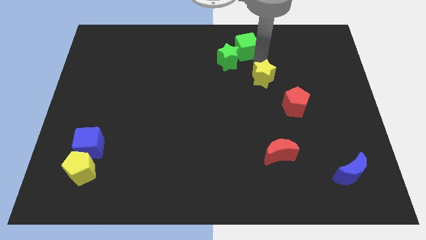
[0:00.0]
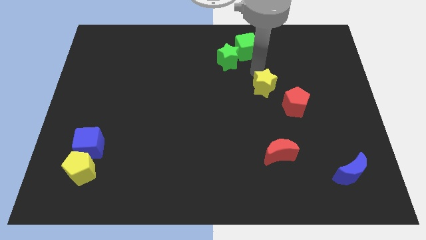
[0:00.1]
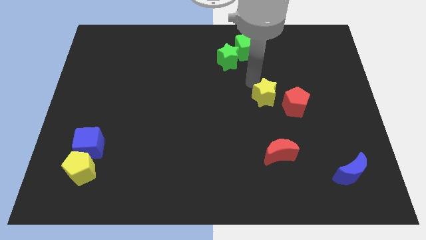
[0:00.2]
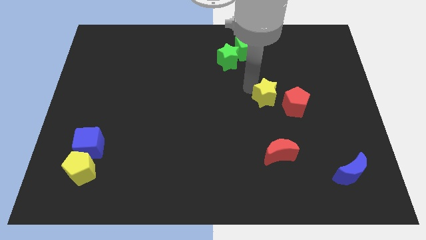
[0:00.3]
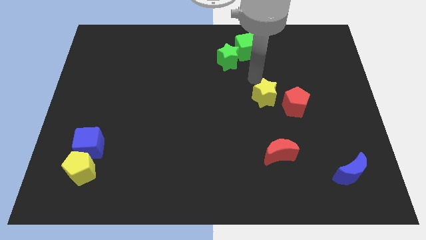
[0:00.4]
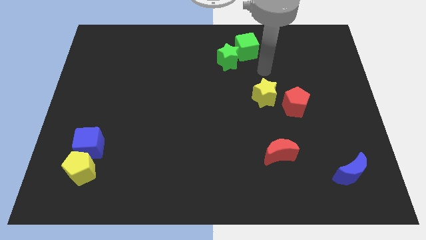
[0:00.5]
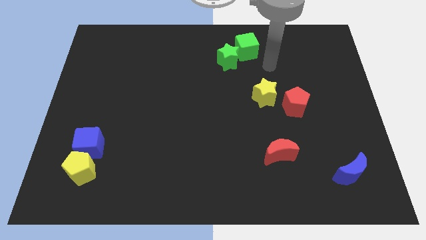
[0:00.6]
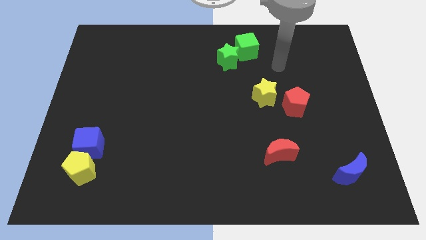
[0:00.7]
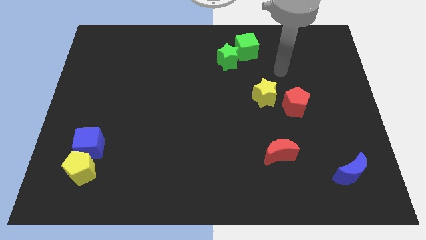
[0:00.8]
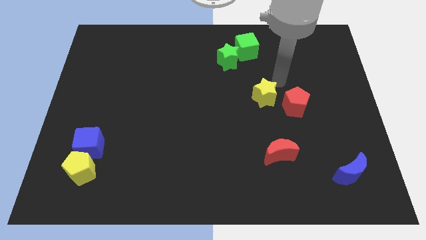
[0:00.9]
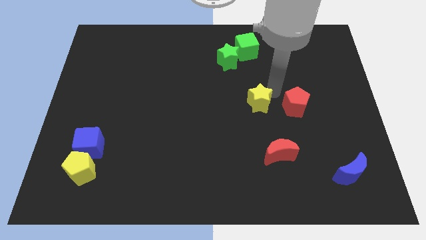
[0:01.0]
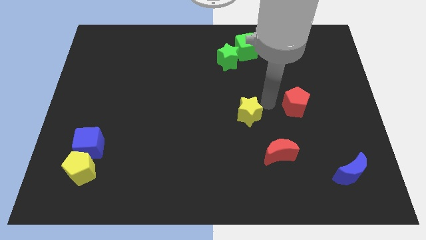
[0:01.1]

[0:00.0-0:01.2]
move the yellow star to the left of the red pentagon

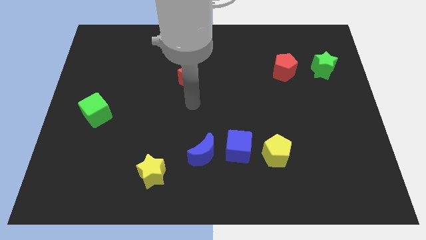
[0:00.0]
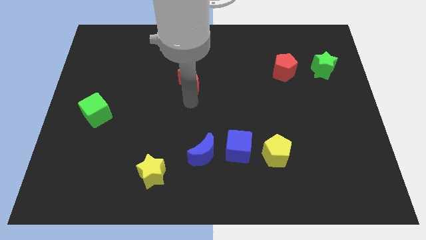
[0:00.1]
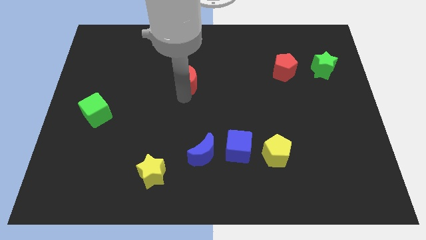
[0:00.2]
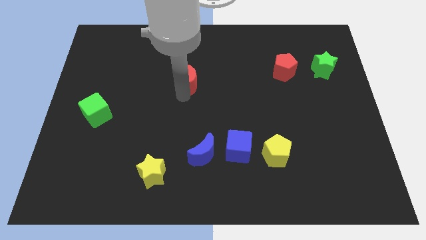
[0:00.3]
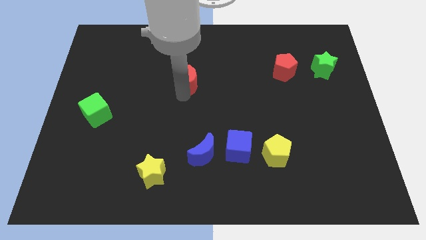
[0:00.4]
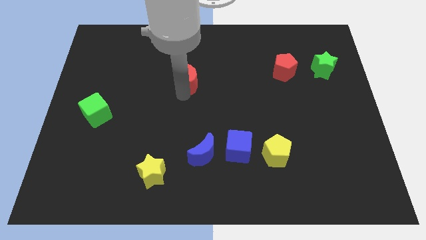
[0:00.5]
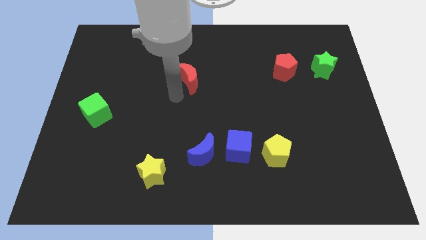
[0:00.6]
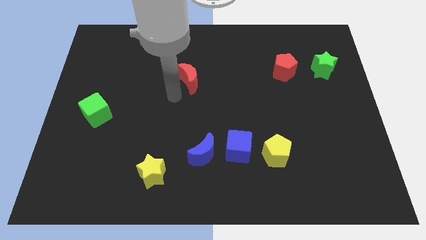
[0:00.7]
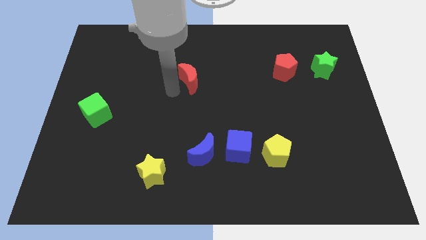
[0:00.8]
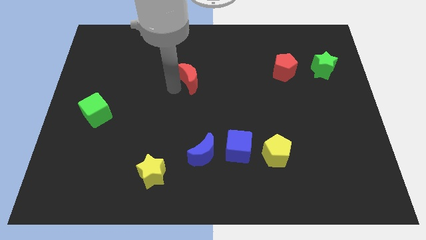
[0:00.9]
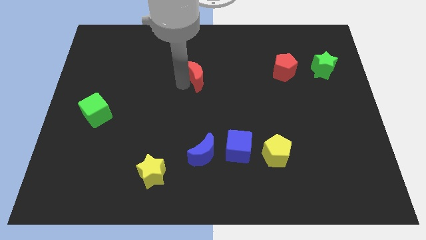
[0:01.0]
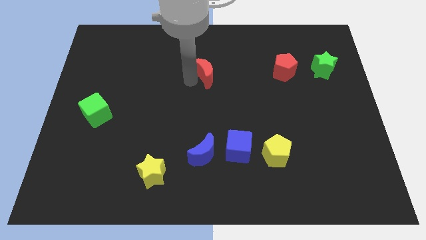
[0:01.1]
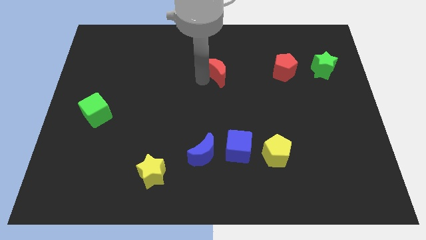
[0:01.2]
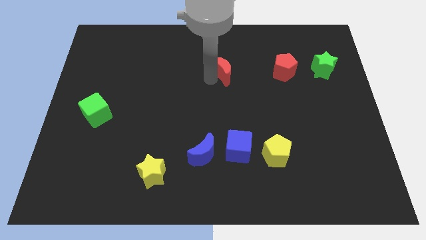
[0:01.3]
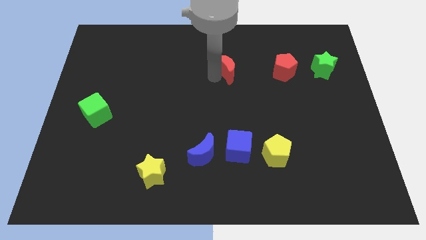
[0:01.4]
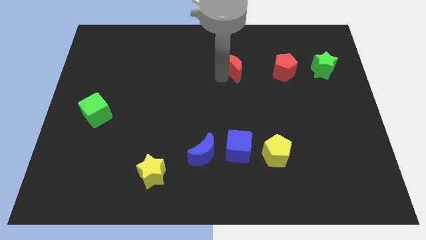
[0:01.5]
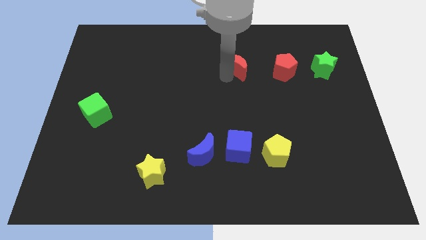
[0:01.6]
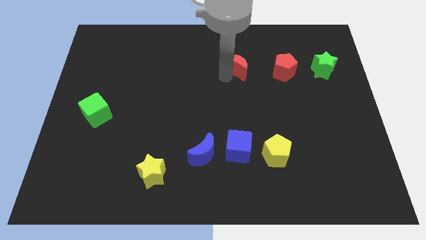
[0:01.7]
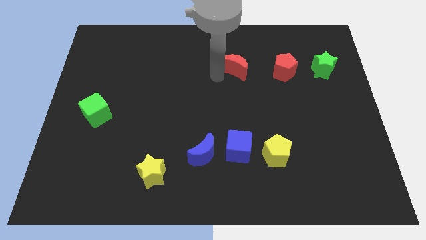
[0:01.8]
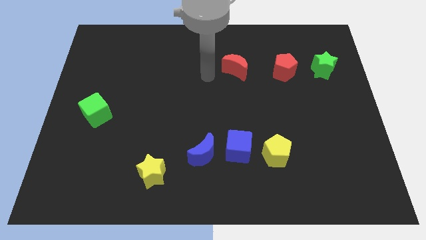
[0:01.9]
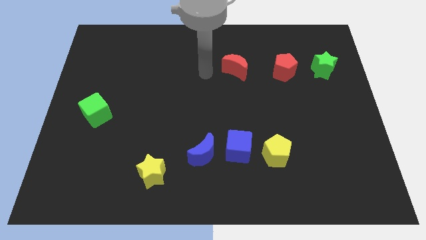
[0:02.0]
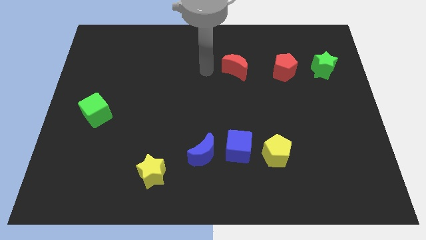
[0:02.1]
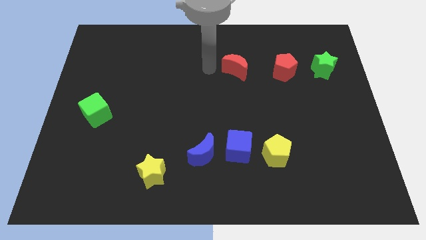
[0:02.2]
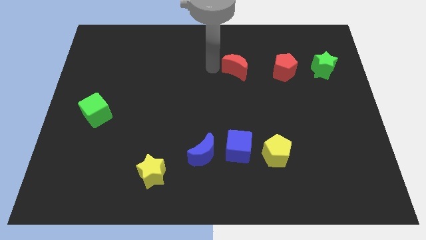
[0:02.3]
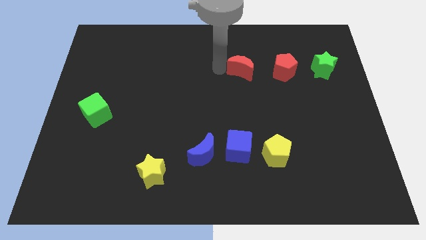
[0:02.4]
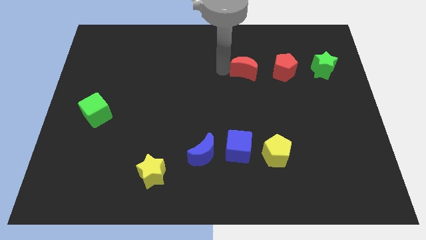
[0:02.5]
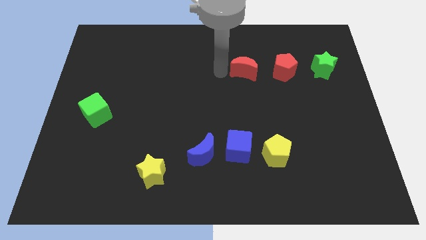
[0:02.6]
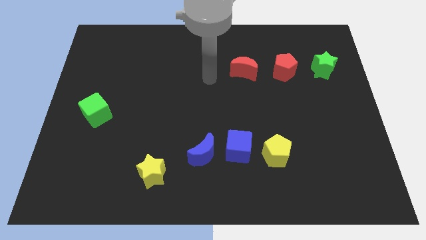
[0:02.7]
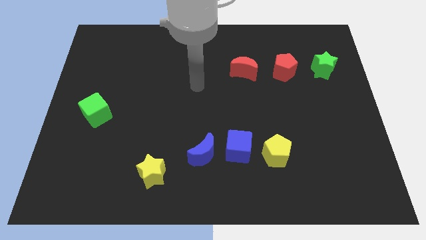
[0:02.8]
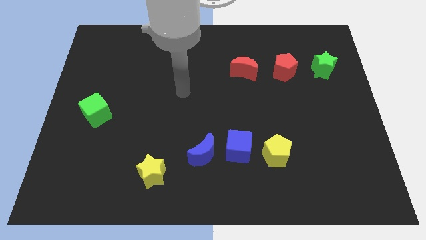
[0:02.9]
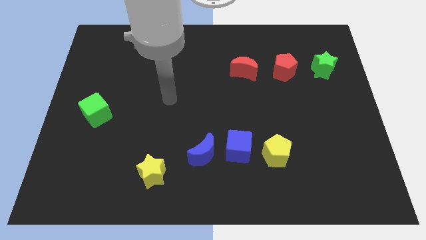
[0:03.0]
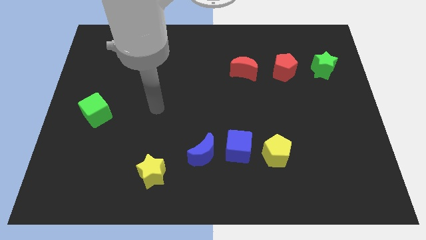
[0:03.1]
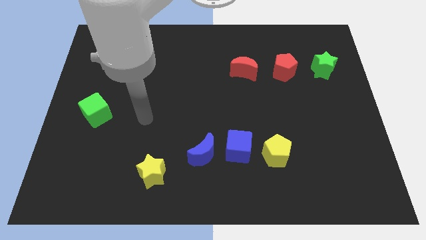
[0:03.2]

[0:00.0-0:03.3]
slide the red crescent to the left of the red pentagon

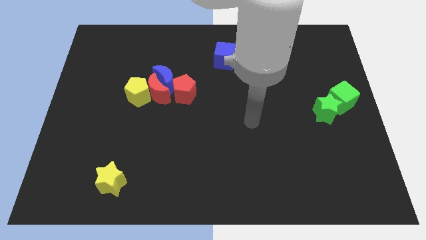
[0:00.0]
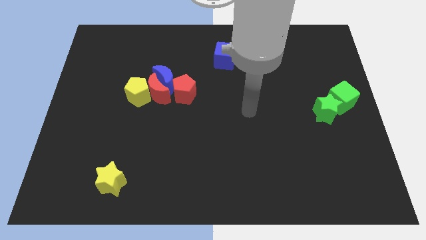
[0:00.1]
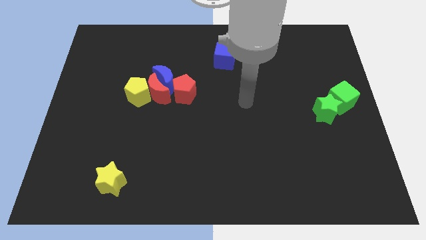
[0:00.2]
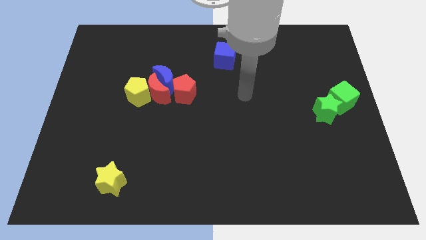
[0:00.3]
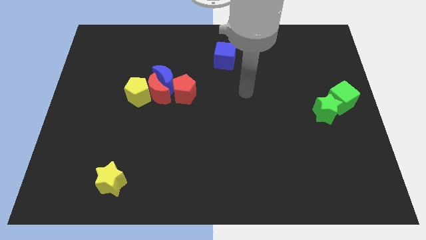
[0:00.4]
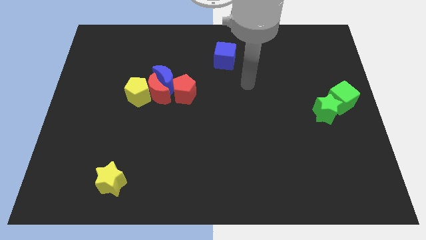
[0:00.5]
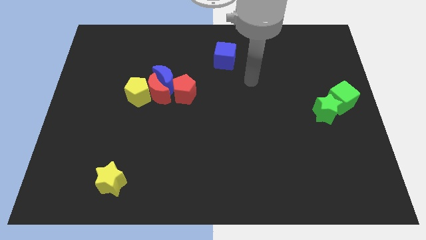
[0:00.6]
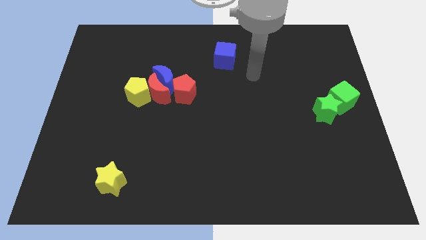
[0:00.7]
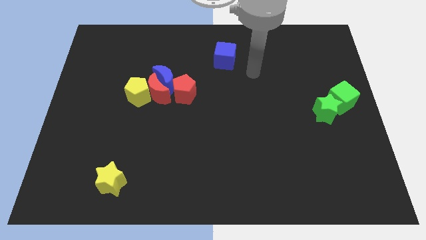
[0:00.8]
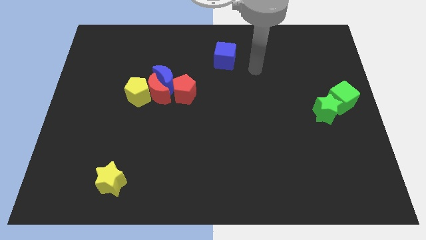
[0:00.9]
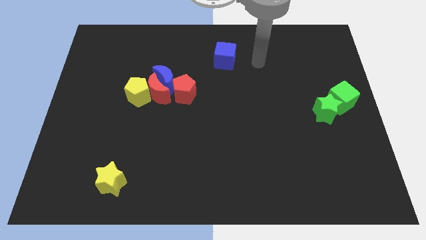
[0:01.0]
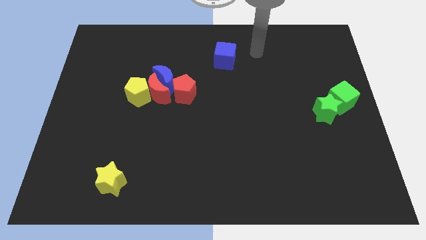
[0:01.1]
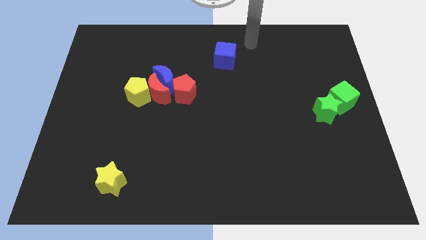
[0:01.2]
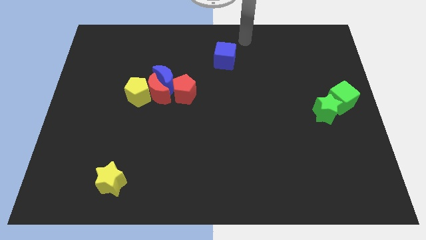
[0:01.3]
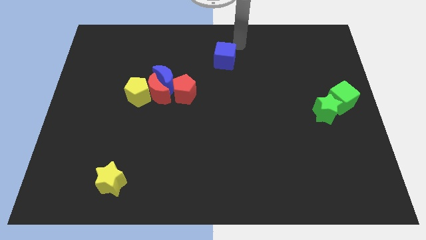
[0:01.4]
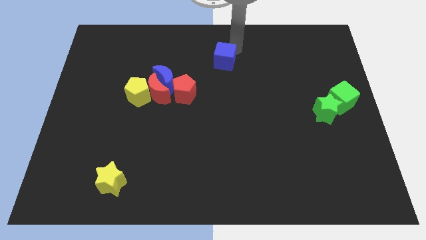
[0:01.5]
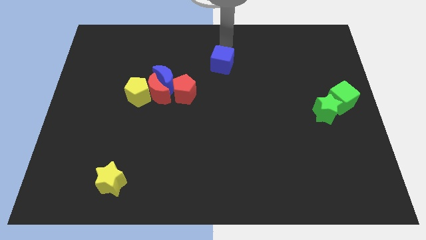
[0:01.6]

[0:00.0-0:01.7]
move your arm towards the top of the blue cube

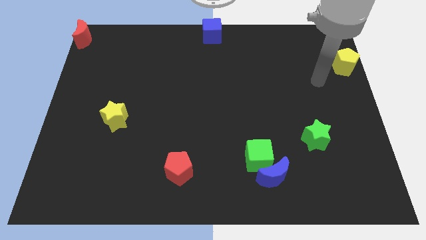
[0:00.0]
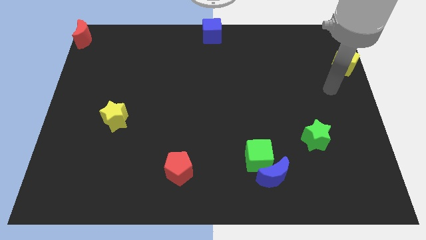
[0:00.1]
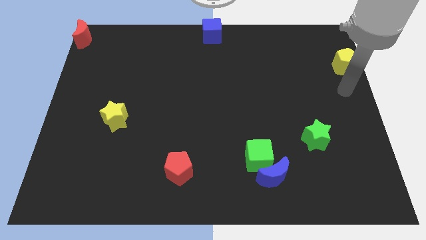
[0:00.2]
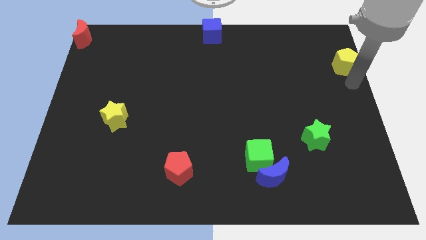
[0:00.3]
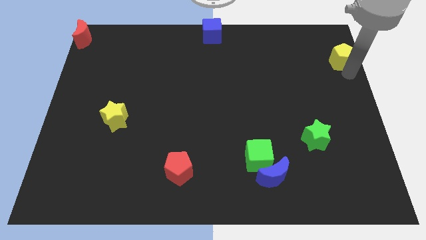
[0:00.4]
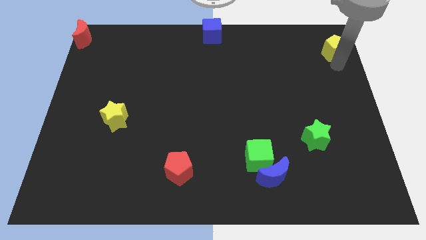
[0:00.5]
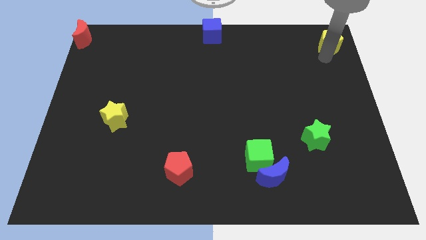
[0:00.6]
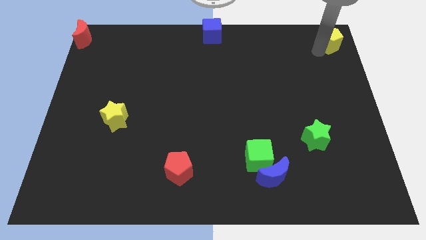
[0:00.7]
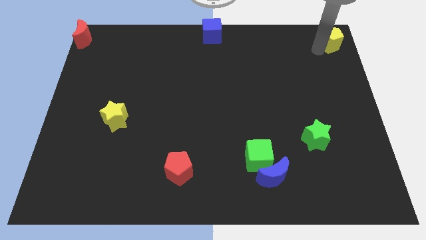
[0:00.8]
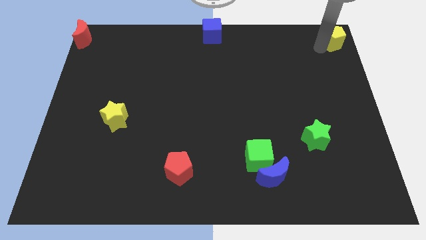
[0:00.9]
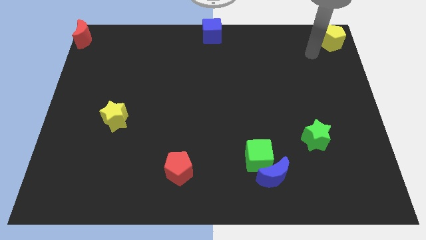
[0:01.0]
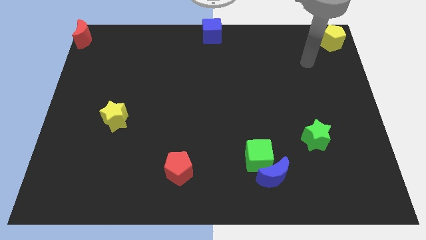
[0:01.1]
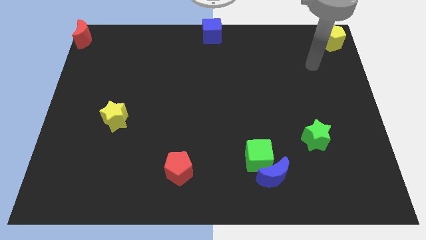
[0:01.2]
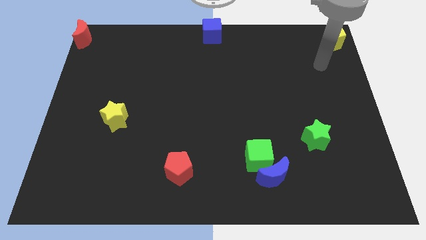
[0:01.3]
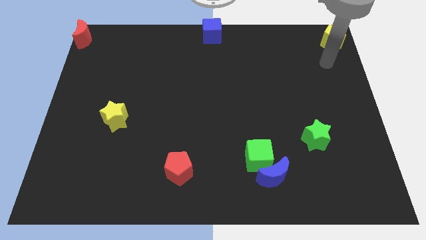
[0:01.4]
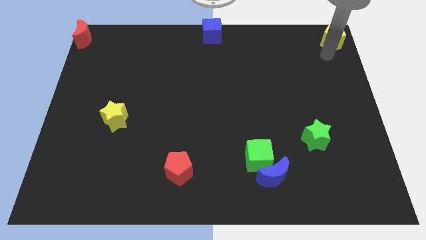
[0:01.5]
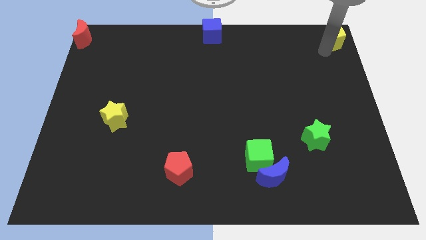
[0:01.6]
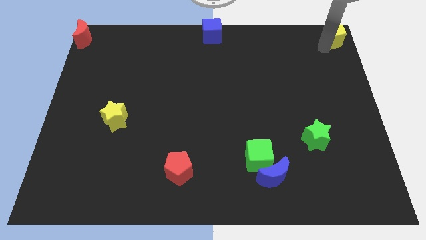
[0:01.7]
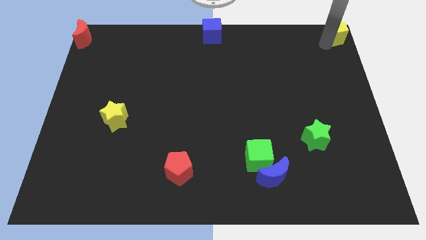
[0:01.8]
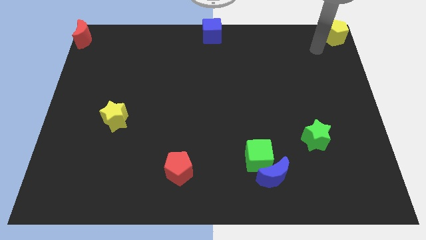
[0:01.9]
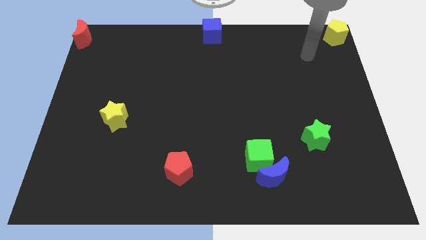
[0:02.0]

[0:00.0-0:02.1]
place the yellow pentagon to the top right corner

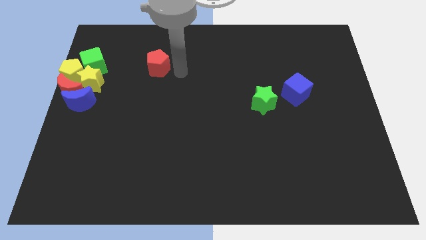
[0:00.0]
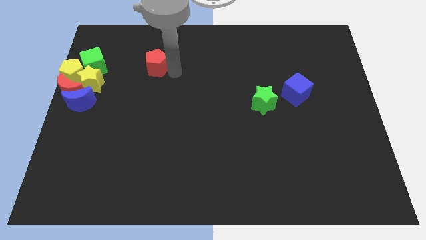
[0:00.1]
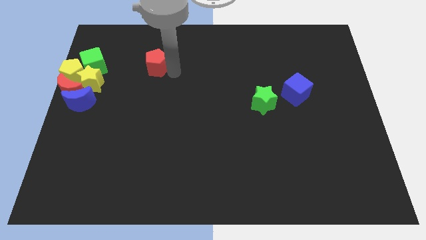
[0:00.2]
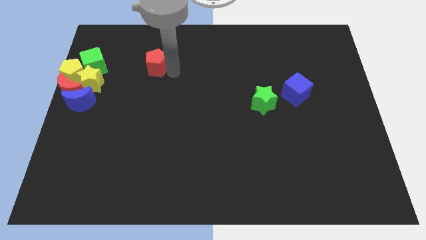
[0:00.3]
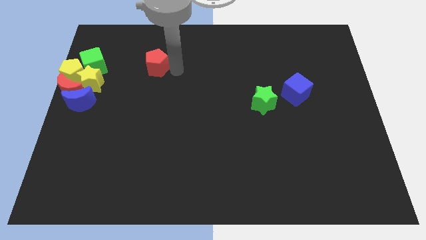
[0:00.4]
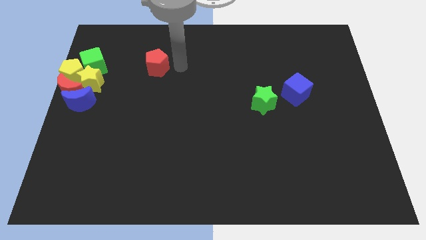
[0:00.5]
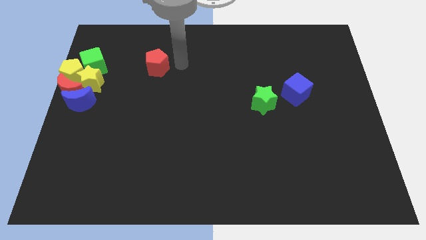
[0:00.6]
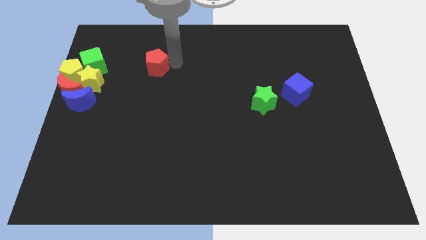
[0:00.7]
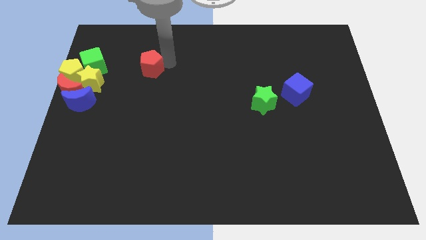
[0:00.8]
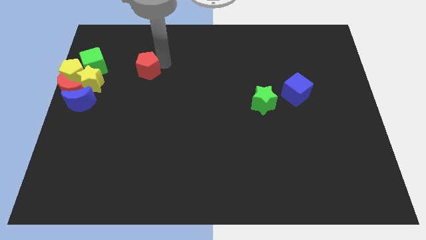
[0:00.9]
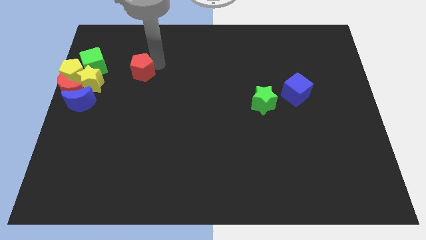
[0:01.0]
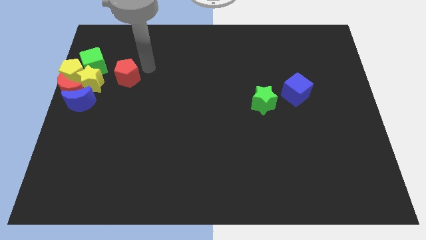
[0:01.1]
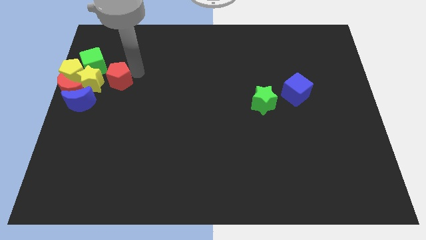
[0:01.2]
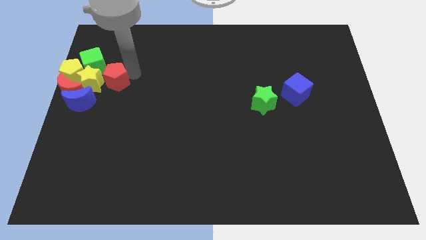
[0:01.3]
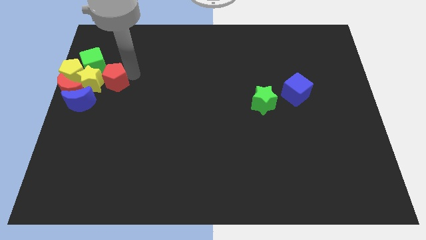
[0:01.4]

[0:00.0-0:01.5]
drag the red pentagon to the center left
